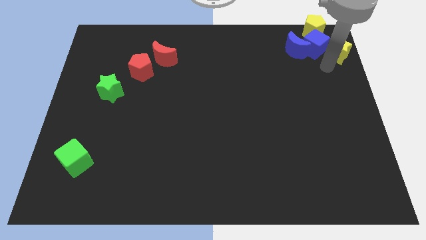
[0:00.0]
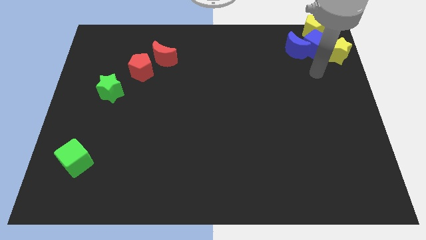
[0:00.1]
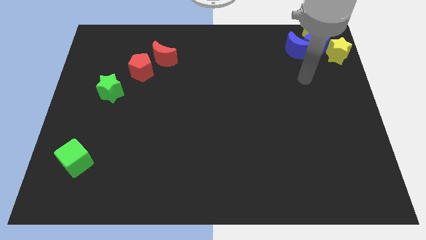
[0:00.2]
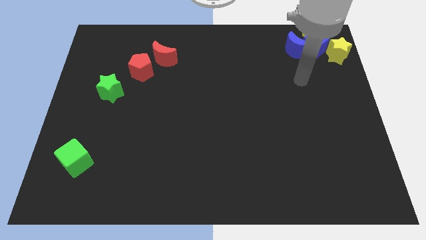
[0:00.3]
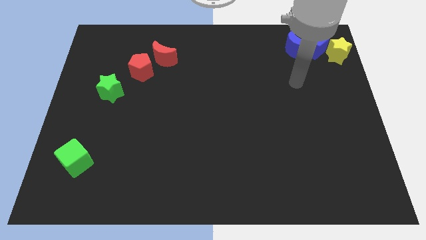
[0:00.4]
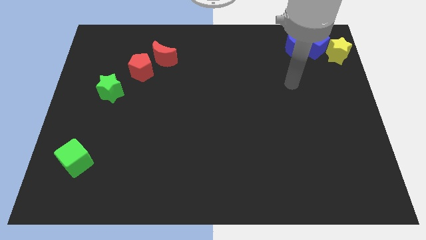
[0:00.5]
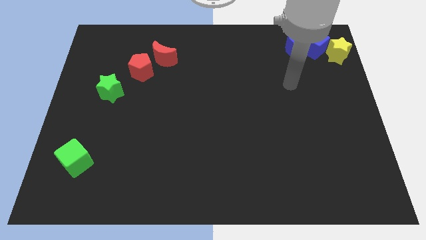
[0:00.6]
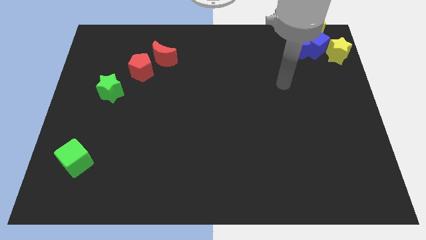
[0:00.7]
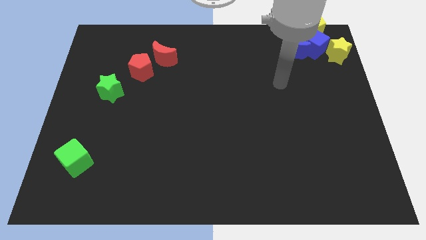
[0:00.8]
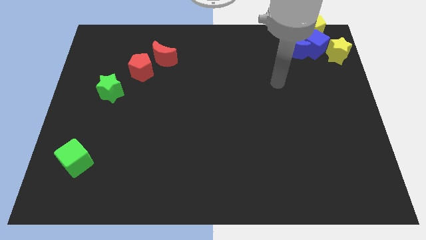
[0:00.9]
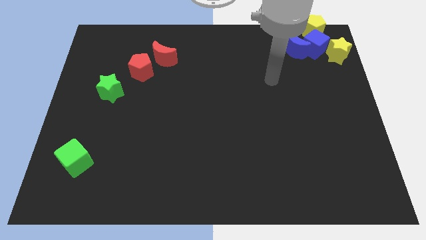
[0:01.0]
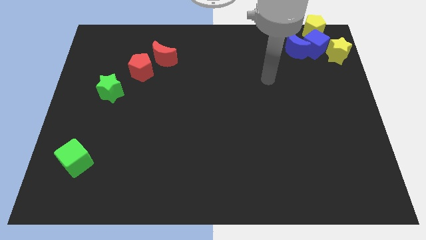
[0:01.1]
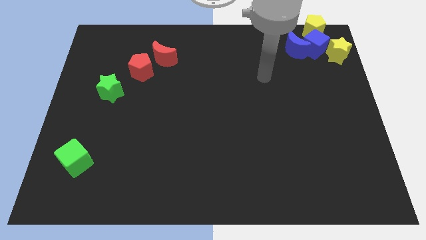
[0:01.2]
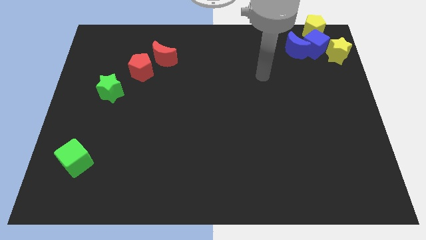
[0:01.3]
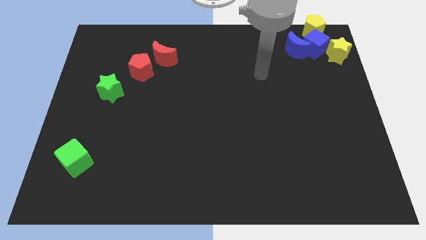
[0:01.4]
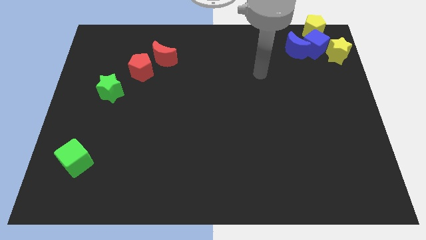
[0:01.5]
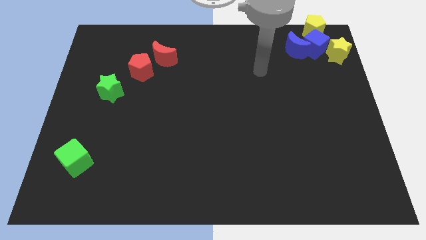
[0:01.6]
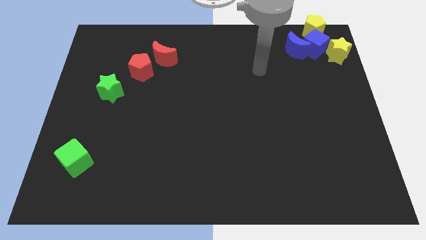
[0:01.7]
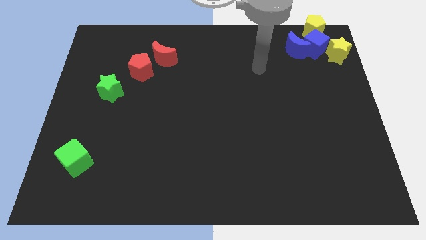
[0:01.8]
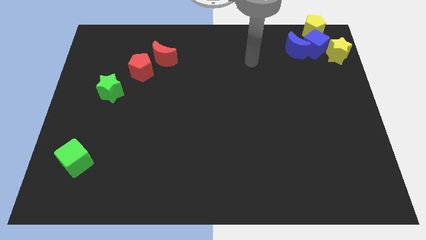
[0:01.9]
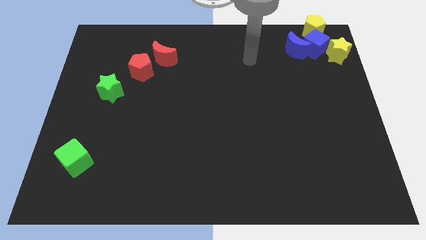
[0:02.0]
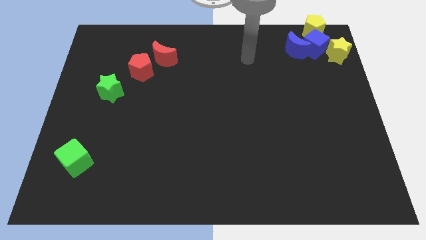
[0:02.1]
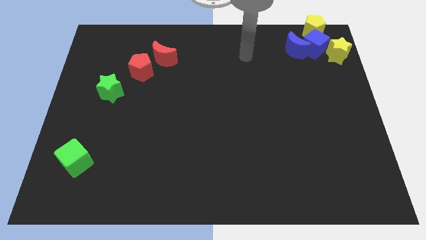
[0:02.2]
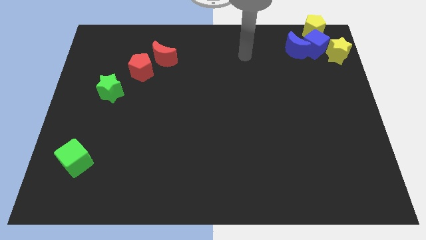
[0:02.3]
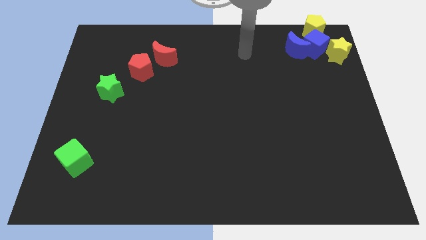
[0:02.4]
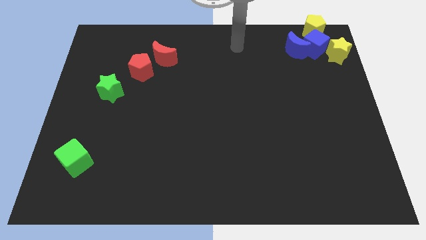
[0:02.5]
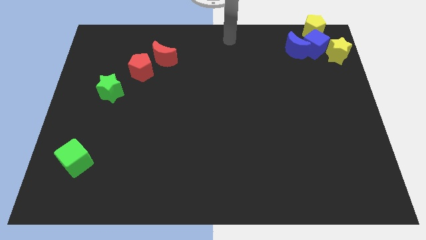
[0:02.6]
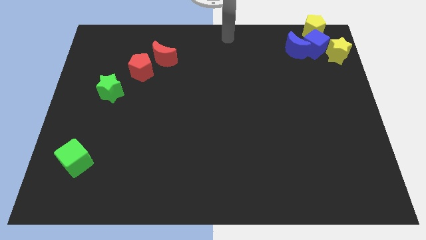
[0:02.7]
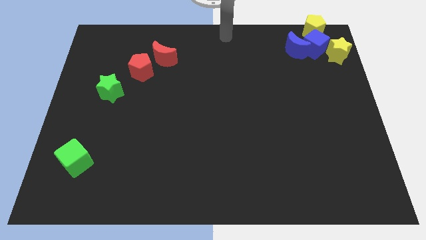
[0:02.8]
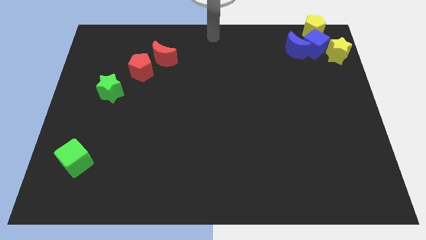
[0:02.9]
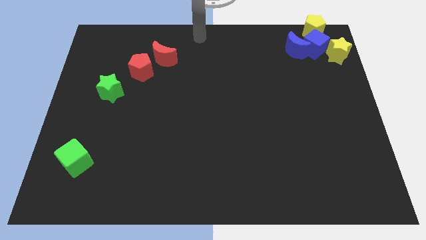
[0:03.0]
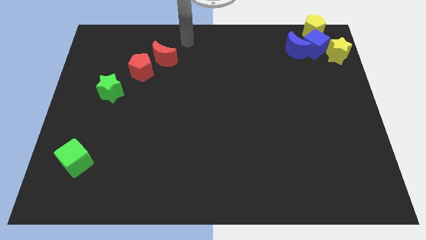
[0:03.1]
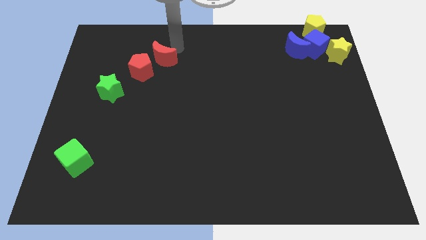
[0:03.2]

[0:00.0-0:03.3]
move arm near red moon

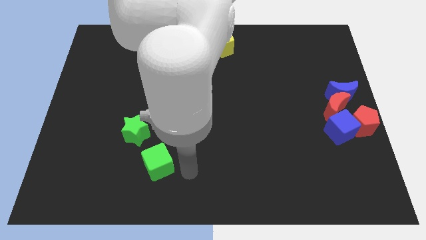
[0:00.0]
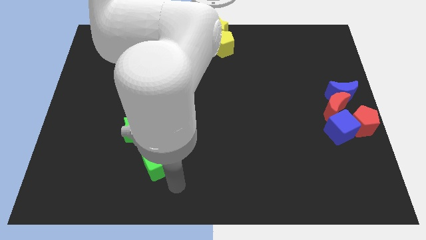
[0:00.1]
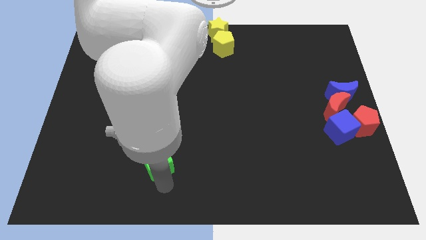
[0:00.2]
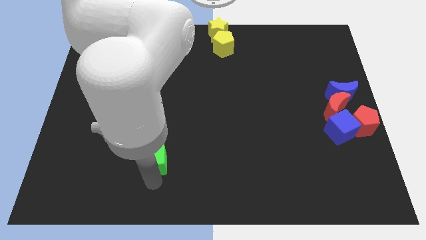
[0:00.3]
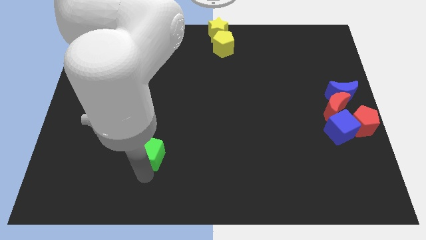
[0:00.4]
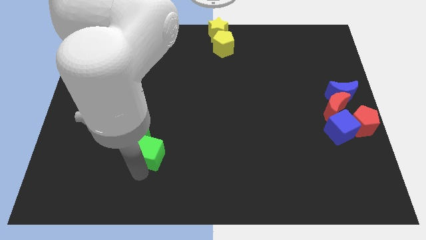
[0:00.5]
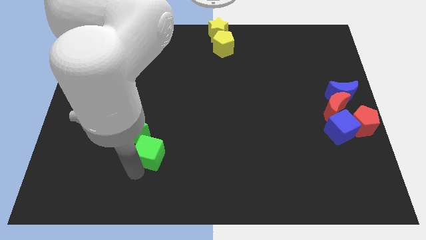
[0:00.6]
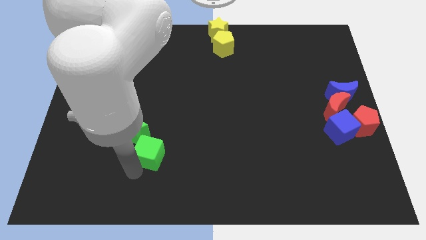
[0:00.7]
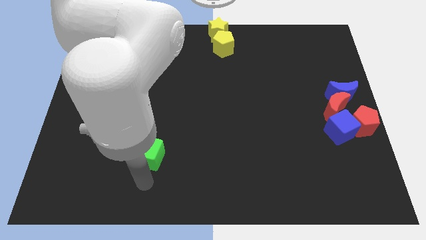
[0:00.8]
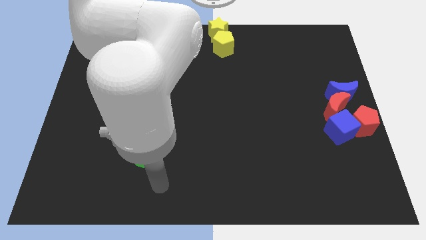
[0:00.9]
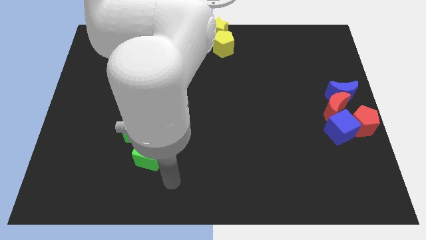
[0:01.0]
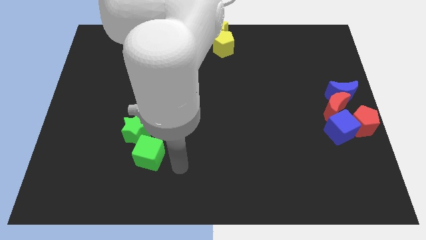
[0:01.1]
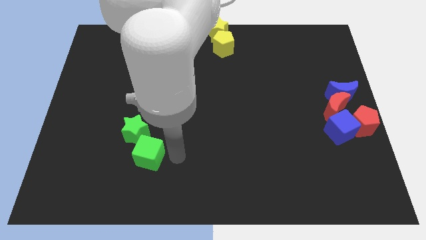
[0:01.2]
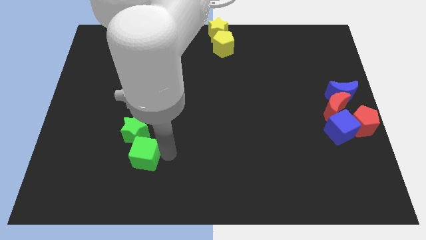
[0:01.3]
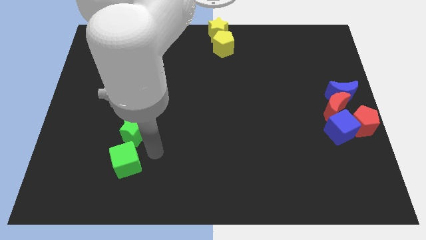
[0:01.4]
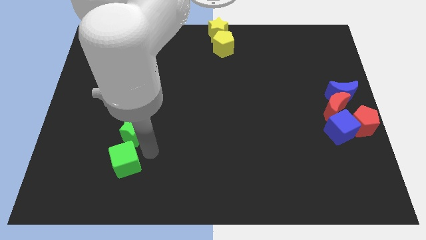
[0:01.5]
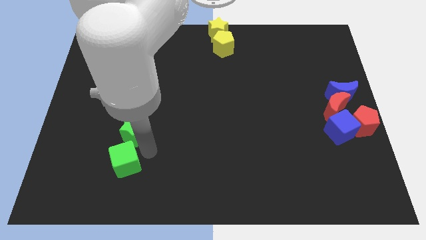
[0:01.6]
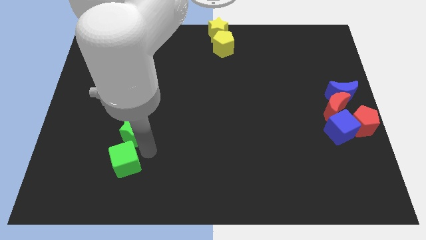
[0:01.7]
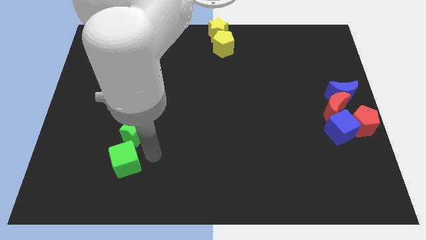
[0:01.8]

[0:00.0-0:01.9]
push the green cube into green star

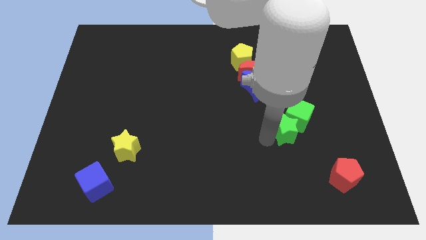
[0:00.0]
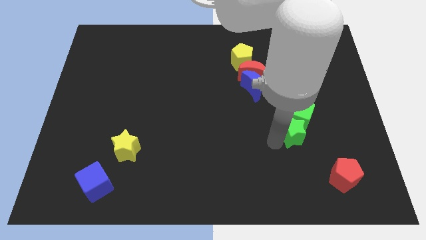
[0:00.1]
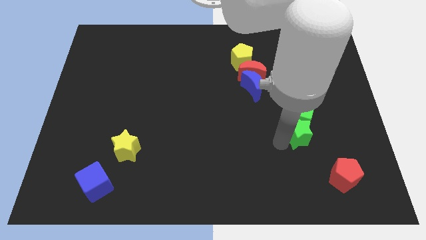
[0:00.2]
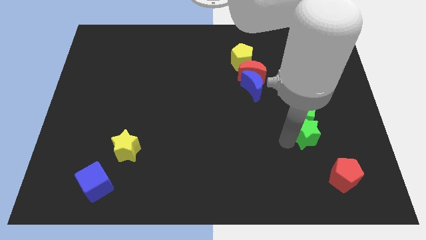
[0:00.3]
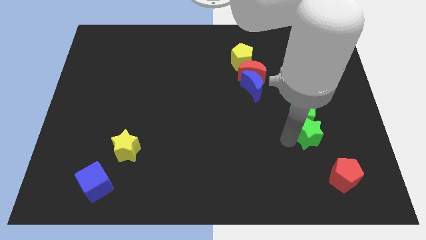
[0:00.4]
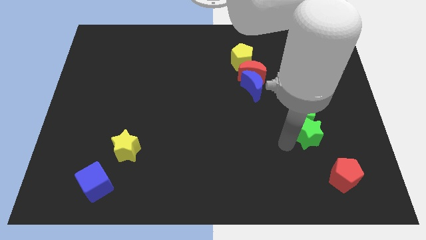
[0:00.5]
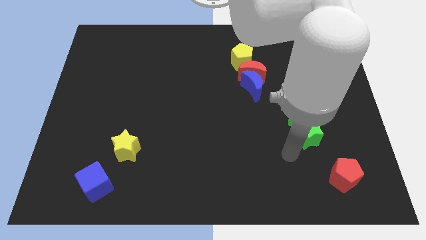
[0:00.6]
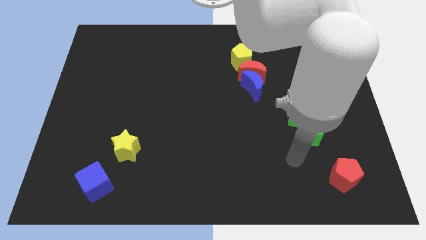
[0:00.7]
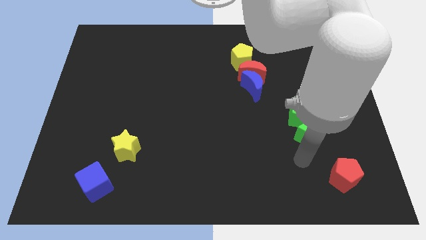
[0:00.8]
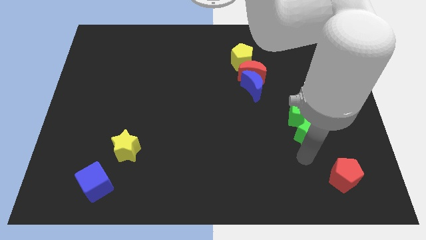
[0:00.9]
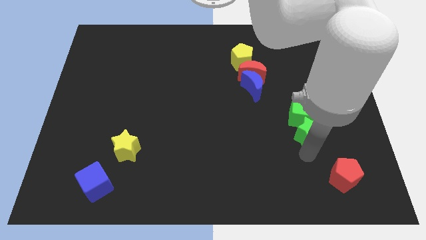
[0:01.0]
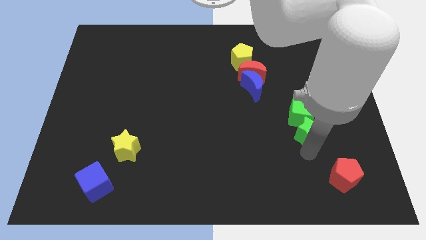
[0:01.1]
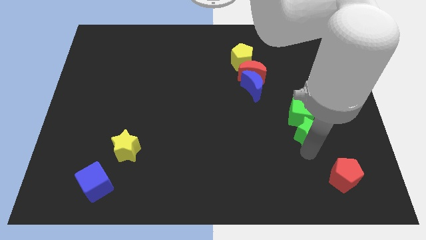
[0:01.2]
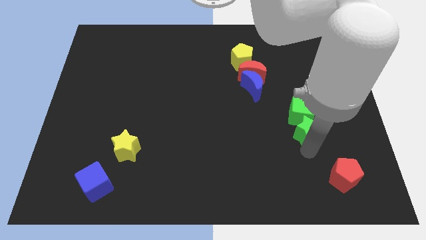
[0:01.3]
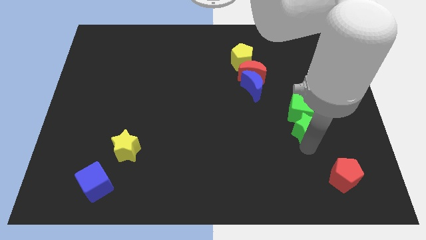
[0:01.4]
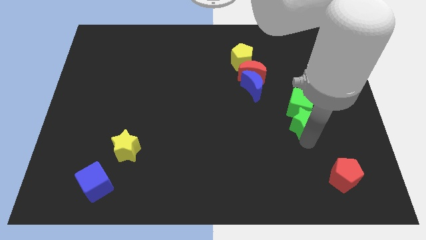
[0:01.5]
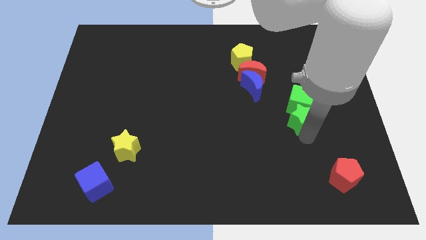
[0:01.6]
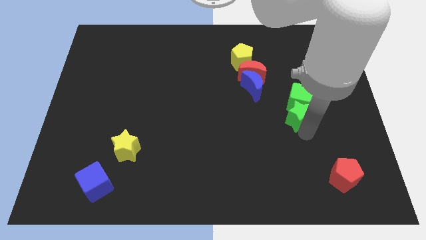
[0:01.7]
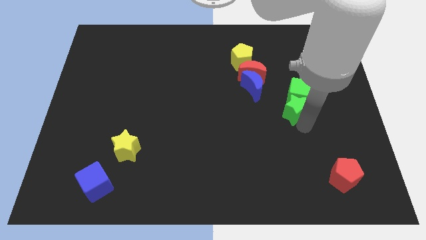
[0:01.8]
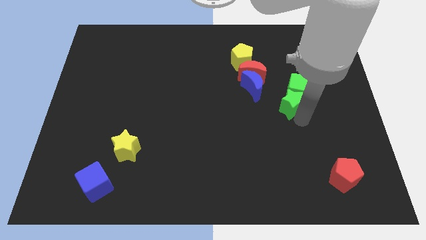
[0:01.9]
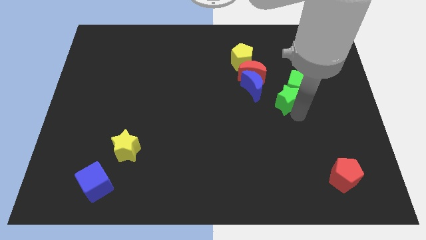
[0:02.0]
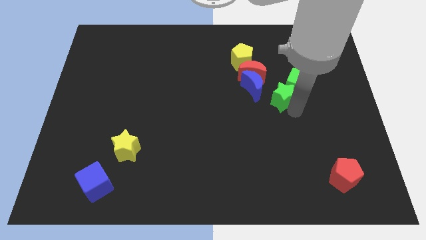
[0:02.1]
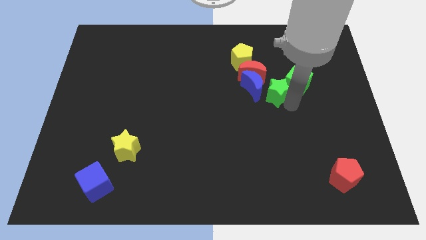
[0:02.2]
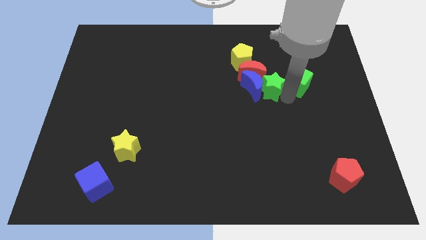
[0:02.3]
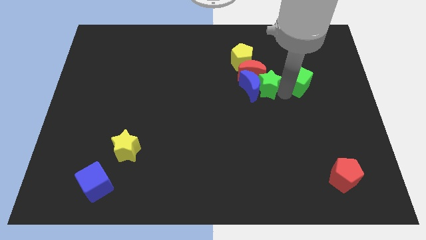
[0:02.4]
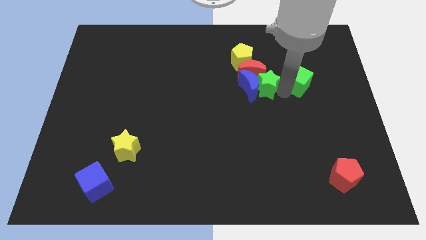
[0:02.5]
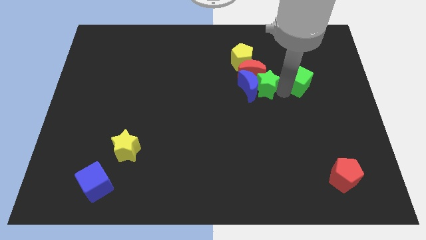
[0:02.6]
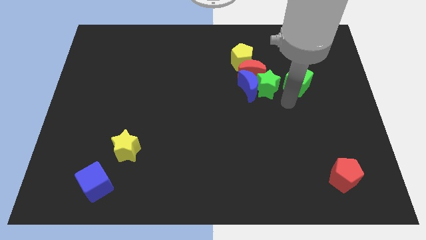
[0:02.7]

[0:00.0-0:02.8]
move the green blocks towards top

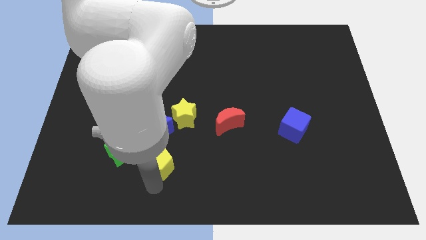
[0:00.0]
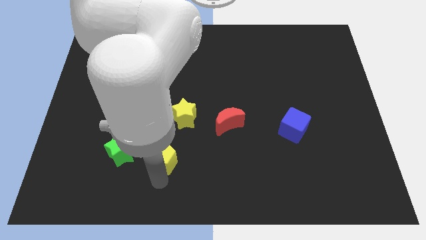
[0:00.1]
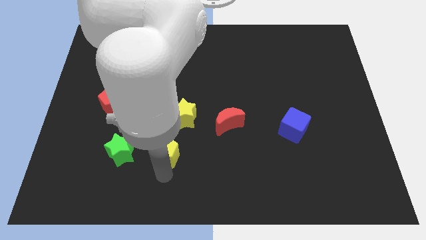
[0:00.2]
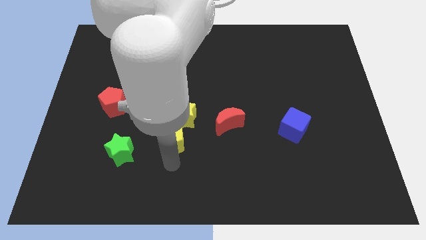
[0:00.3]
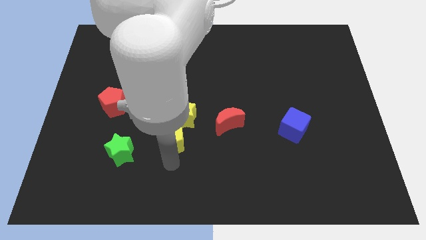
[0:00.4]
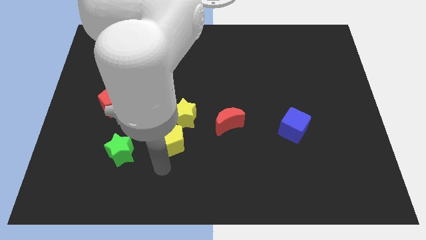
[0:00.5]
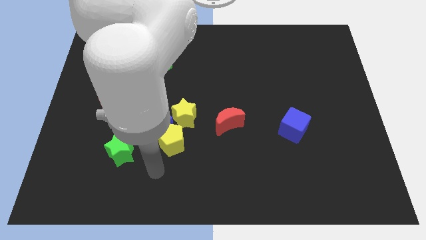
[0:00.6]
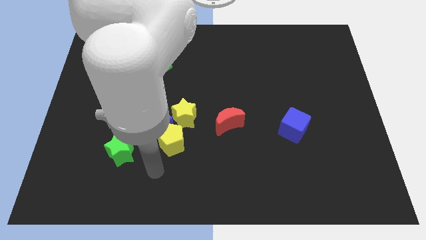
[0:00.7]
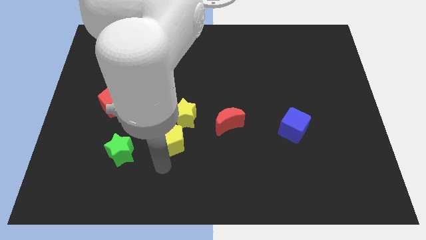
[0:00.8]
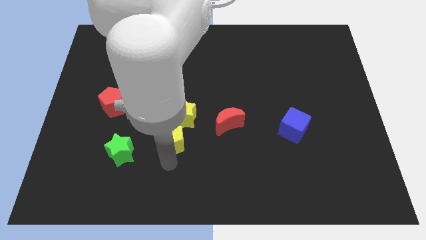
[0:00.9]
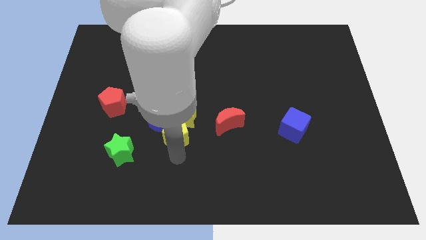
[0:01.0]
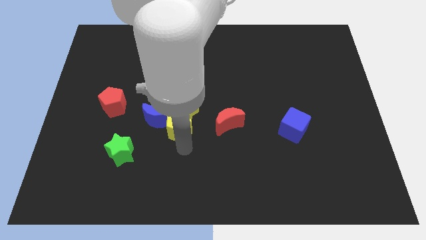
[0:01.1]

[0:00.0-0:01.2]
move the yellow pentagon to the bottom of the yellow star
